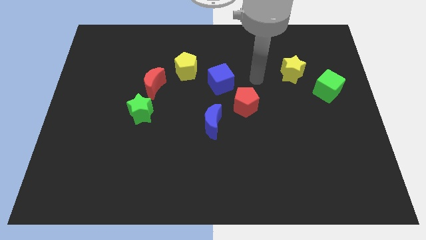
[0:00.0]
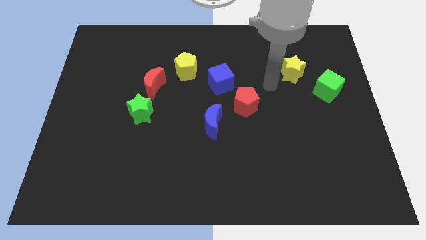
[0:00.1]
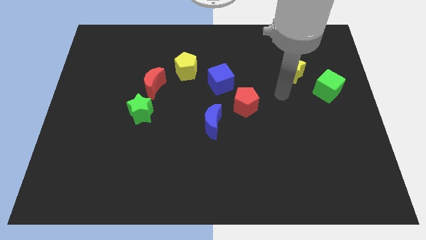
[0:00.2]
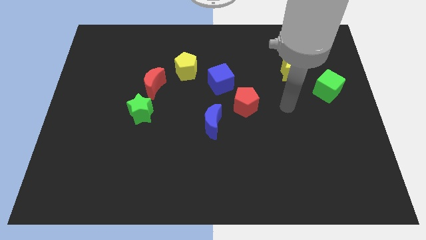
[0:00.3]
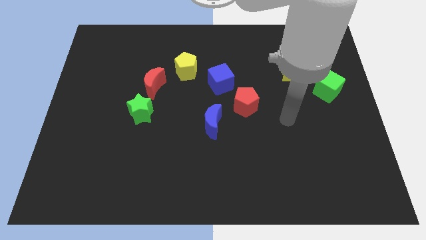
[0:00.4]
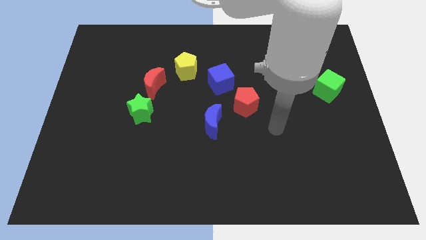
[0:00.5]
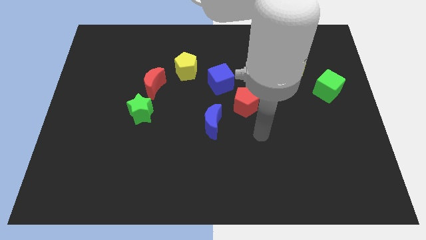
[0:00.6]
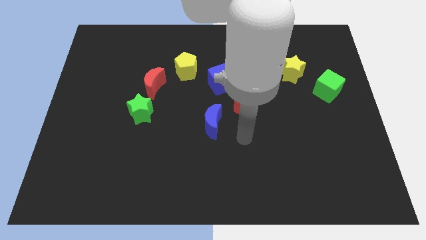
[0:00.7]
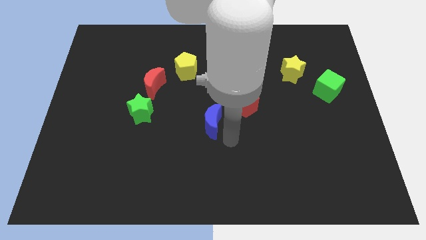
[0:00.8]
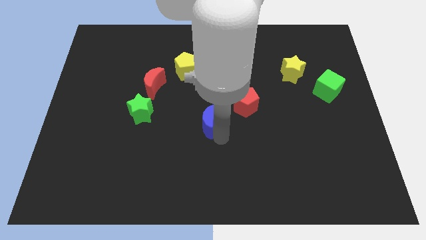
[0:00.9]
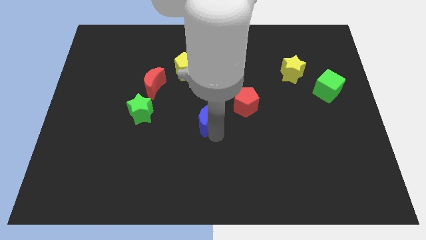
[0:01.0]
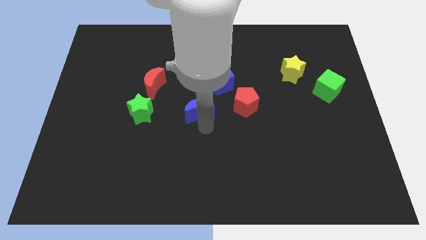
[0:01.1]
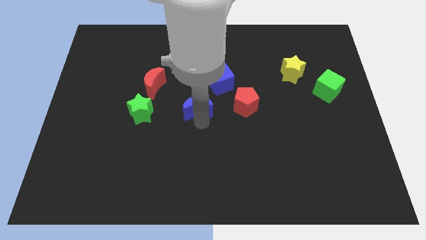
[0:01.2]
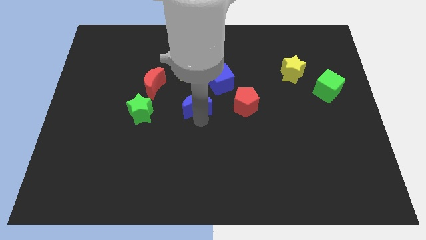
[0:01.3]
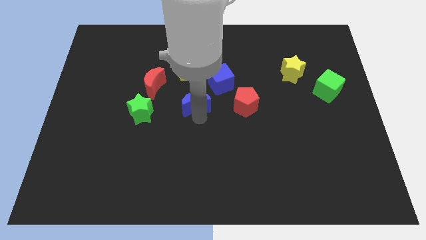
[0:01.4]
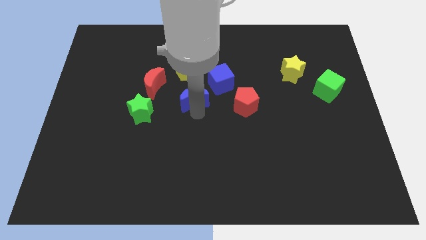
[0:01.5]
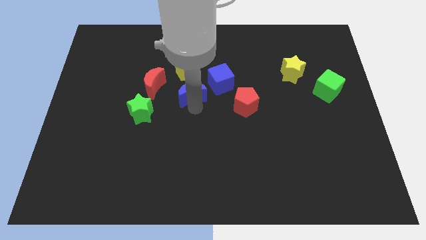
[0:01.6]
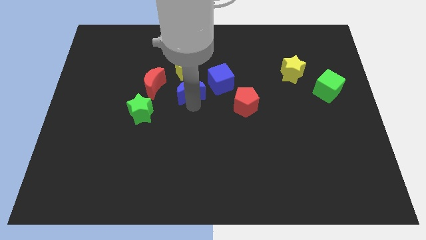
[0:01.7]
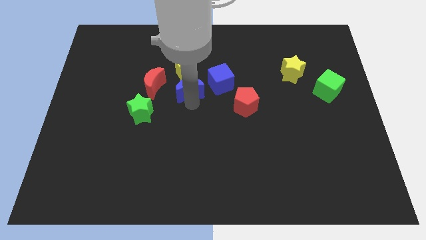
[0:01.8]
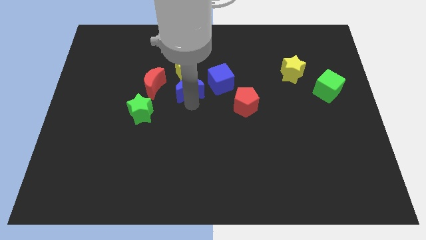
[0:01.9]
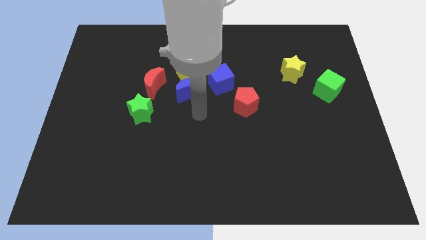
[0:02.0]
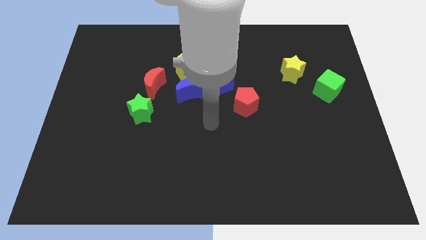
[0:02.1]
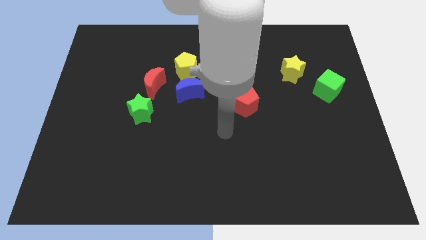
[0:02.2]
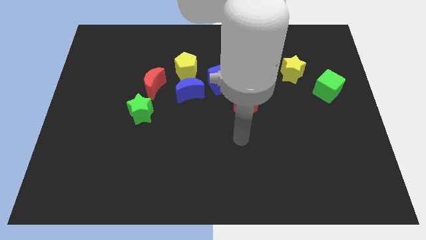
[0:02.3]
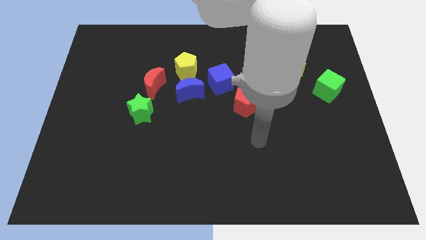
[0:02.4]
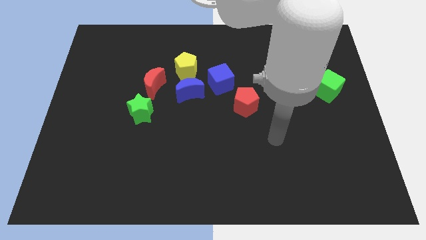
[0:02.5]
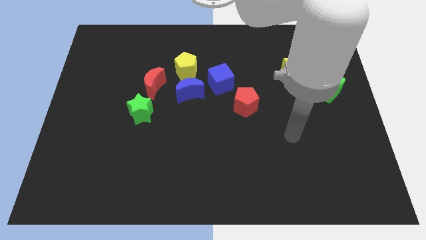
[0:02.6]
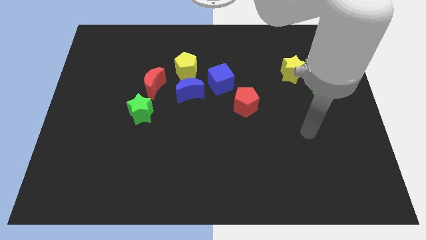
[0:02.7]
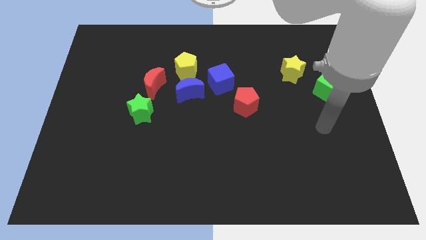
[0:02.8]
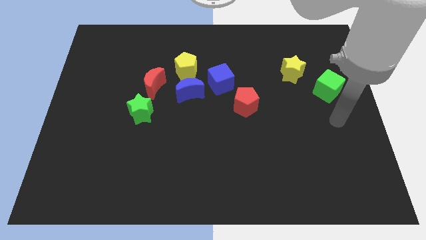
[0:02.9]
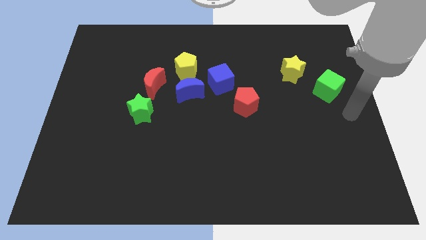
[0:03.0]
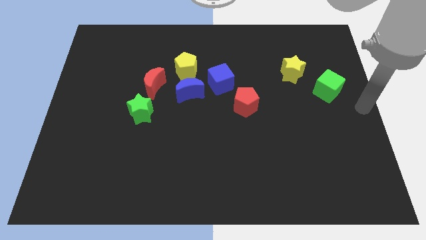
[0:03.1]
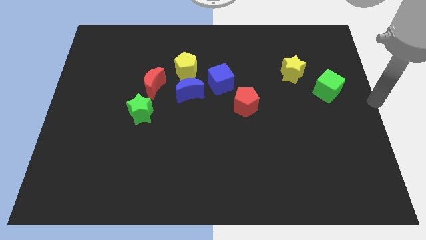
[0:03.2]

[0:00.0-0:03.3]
place the blue moon below the yellow pentagon

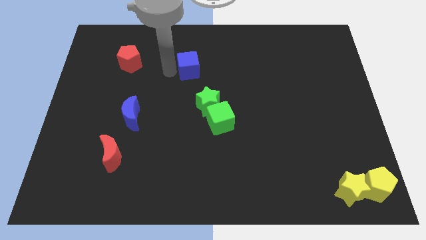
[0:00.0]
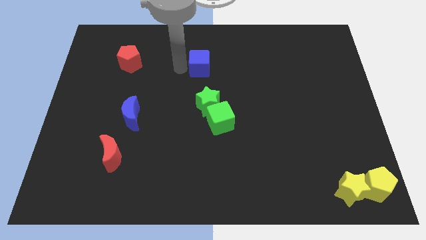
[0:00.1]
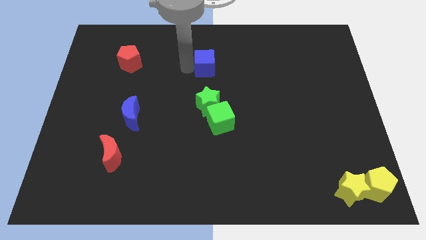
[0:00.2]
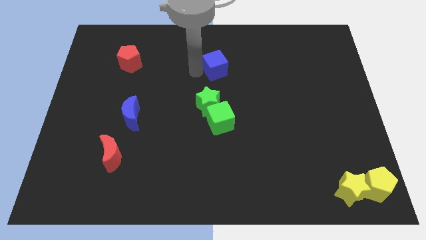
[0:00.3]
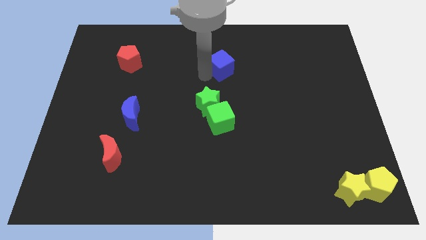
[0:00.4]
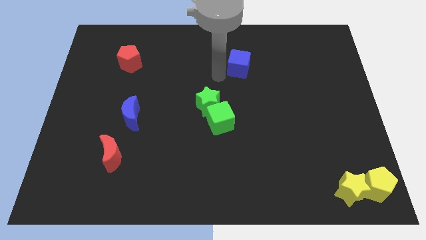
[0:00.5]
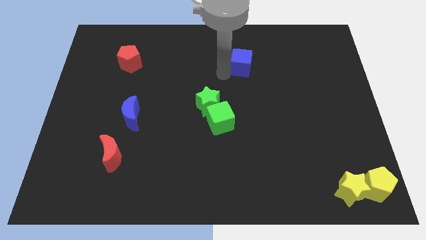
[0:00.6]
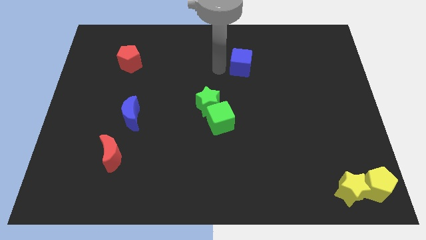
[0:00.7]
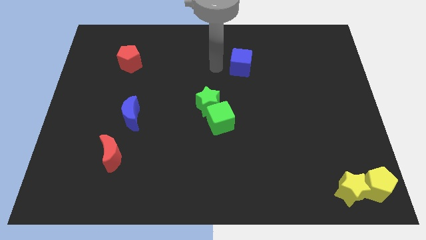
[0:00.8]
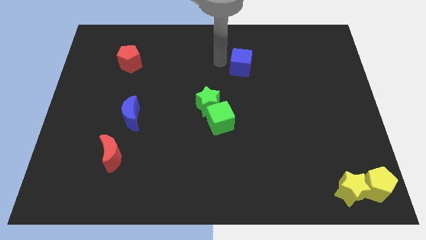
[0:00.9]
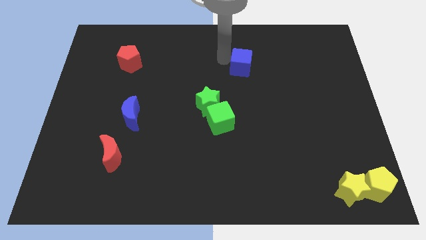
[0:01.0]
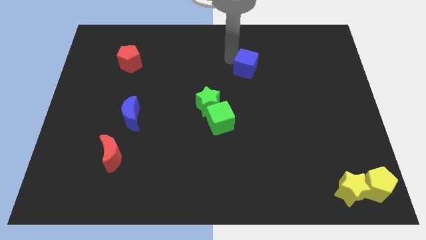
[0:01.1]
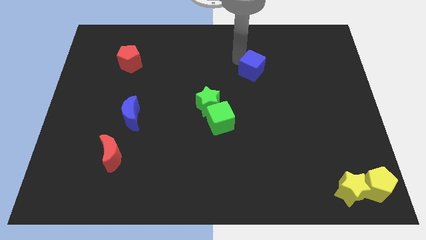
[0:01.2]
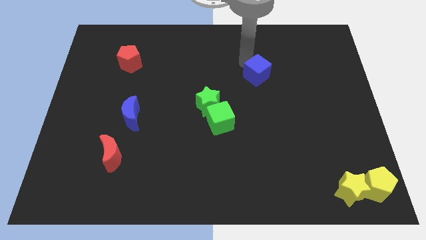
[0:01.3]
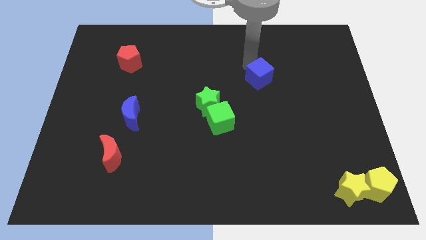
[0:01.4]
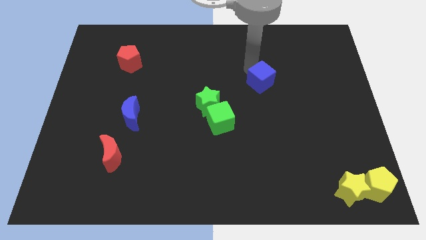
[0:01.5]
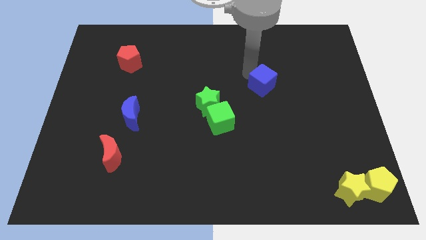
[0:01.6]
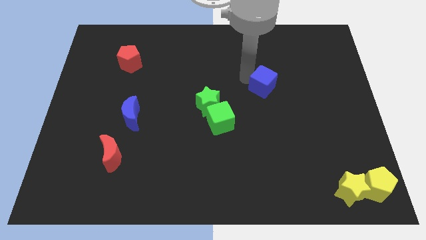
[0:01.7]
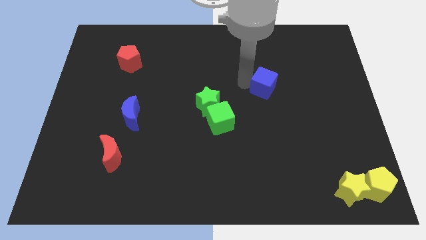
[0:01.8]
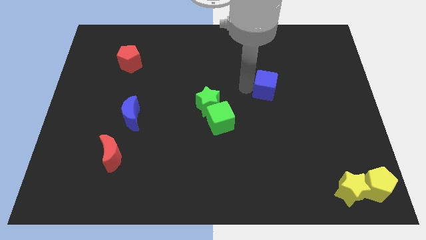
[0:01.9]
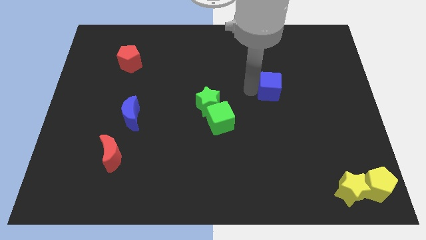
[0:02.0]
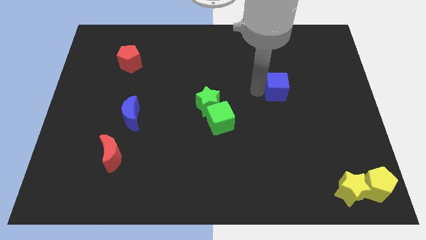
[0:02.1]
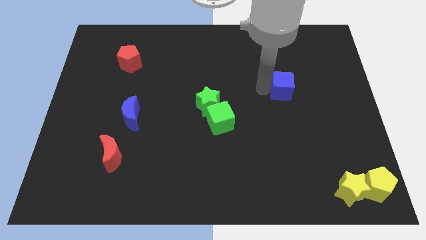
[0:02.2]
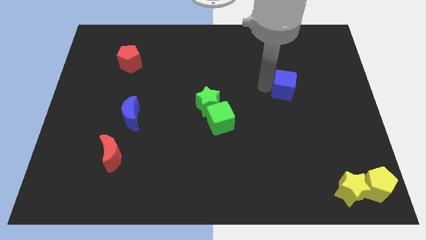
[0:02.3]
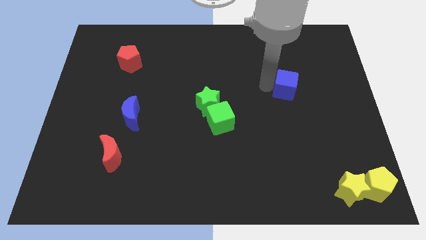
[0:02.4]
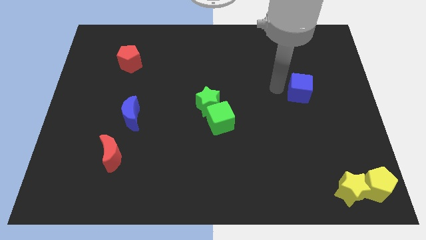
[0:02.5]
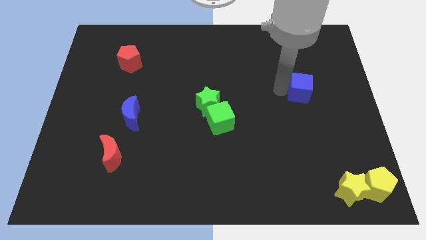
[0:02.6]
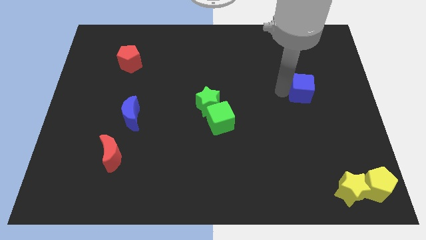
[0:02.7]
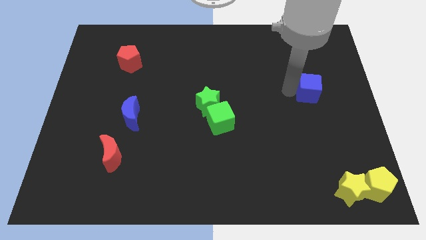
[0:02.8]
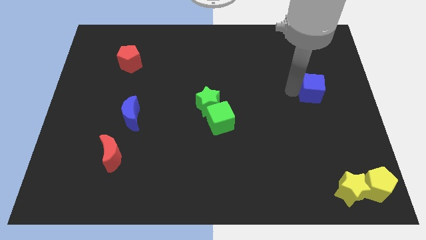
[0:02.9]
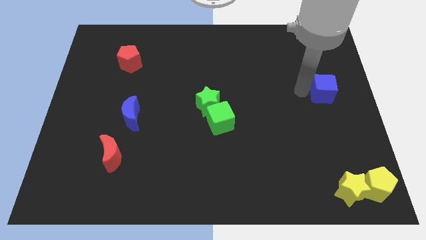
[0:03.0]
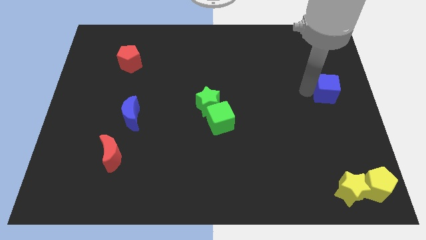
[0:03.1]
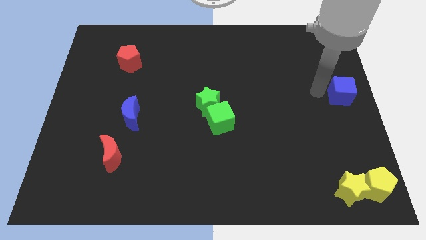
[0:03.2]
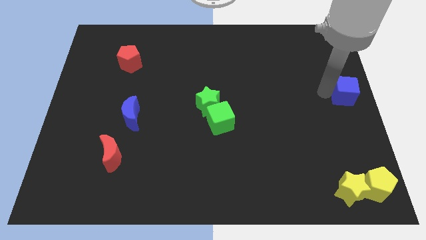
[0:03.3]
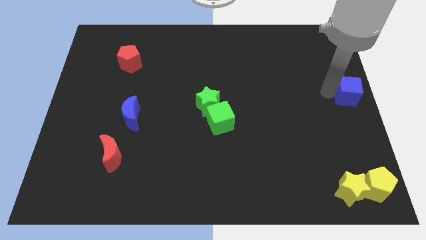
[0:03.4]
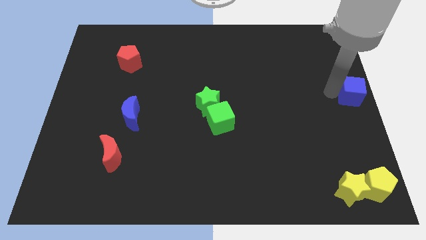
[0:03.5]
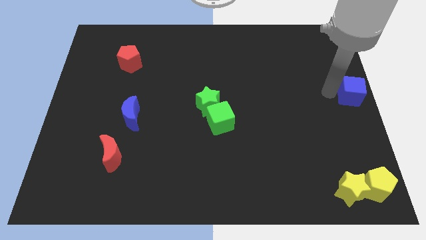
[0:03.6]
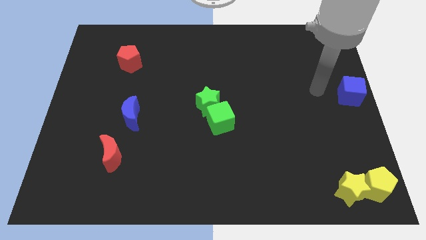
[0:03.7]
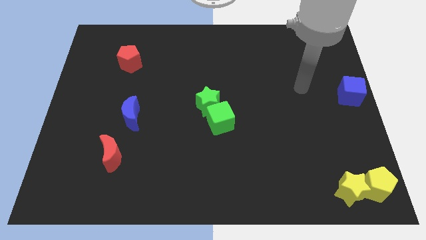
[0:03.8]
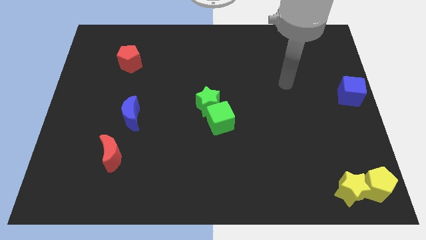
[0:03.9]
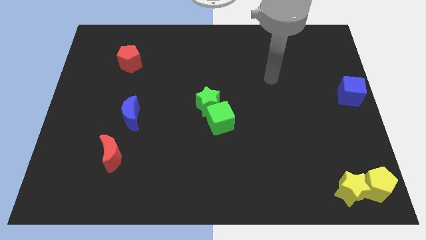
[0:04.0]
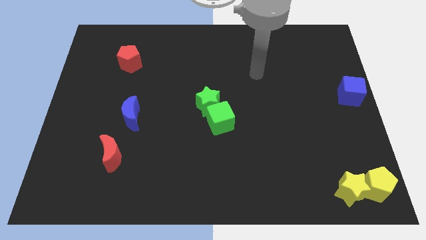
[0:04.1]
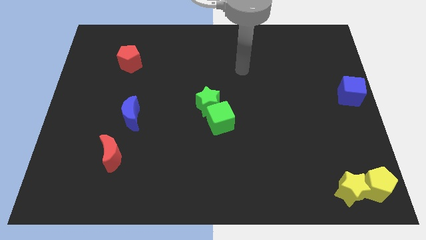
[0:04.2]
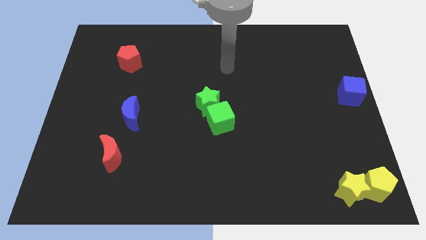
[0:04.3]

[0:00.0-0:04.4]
push the blue cube to the right side of the board

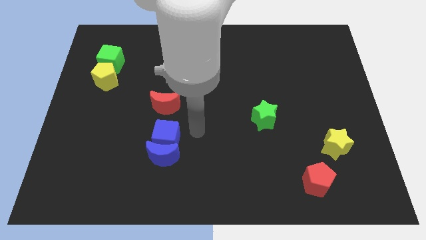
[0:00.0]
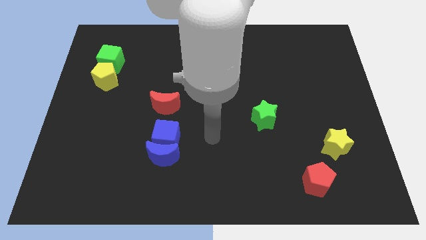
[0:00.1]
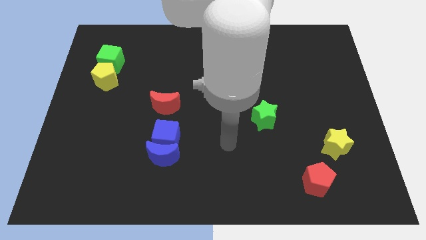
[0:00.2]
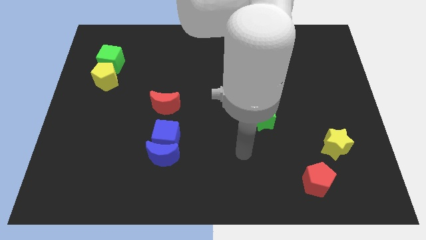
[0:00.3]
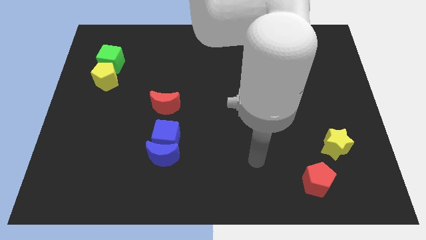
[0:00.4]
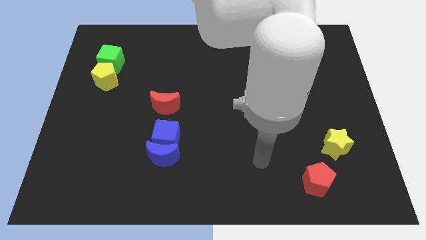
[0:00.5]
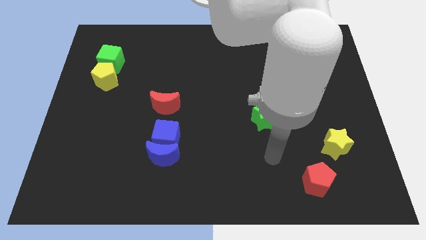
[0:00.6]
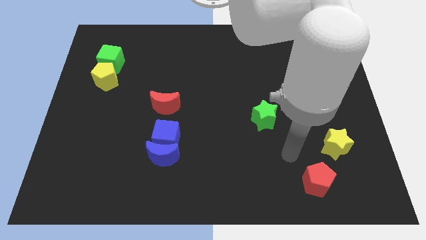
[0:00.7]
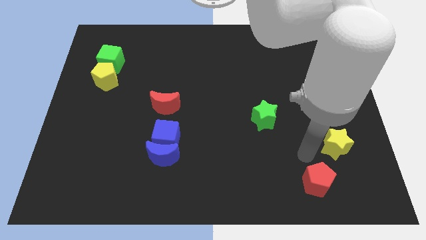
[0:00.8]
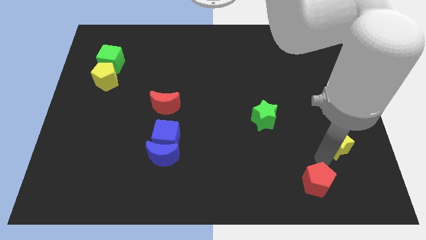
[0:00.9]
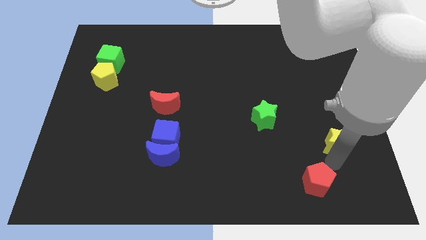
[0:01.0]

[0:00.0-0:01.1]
tap the yellow star
